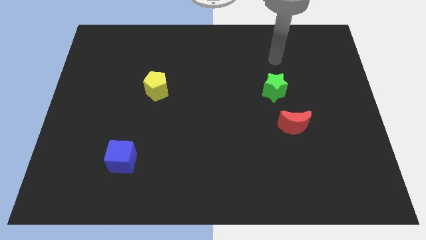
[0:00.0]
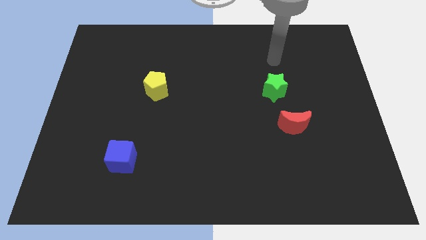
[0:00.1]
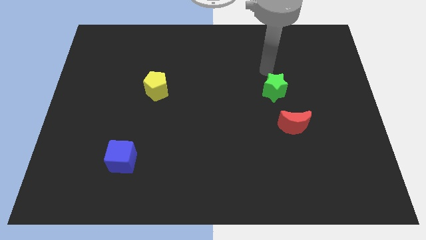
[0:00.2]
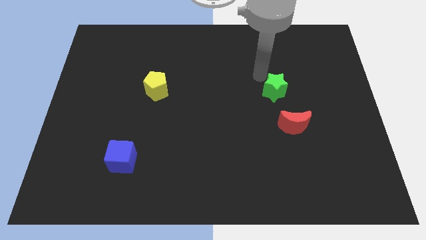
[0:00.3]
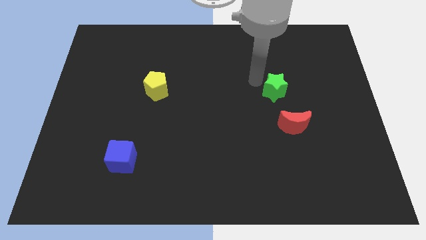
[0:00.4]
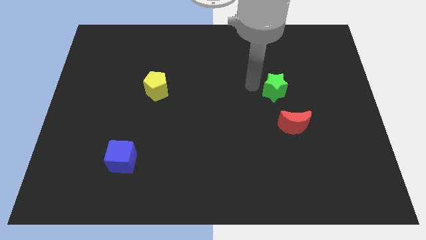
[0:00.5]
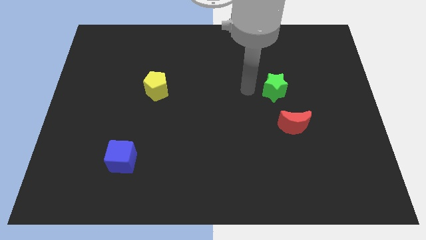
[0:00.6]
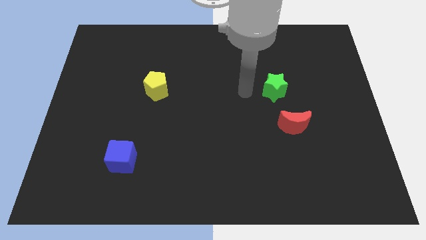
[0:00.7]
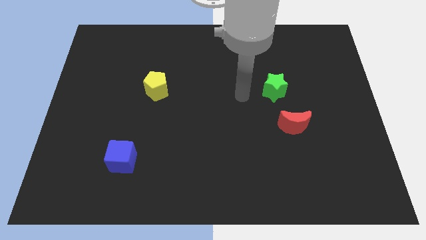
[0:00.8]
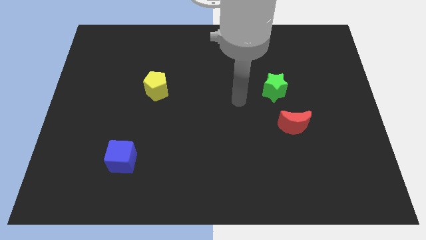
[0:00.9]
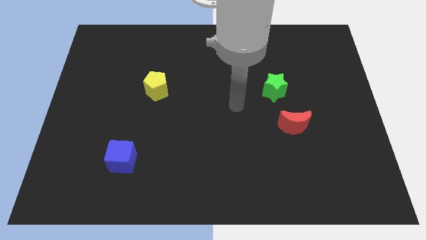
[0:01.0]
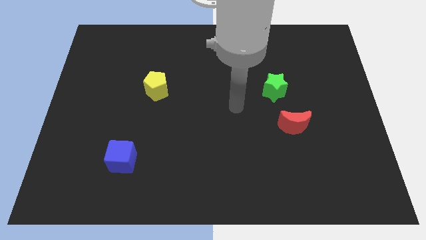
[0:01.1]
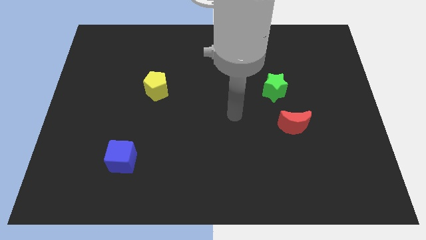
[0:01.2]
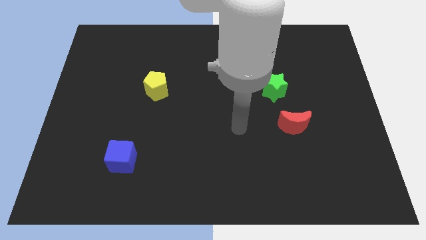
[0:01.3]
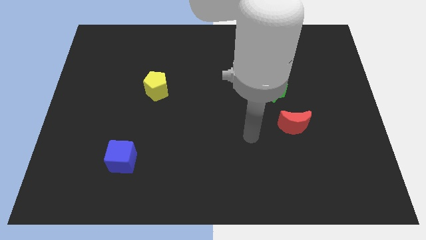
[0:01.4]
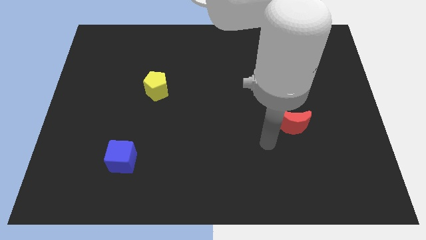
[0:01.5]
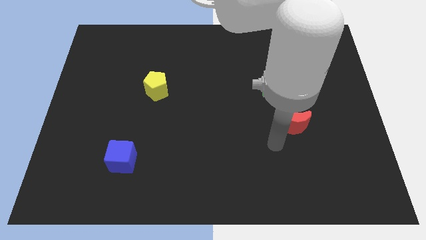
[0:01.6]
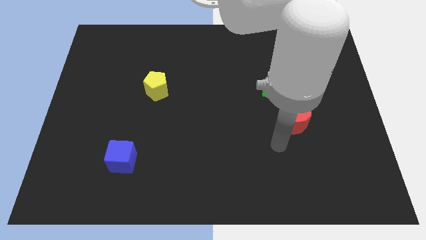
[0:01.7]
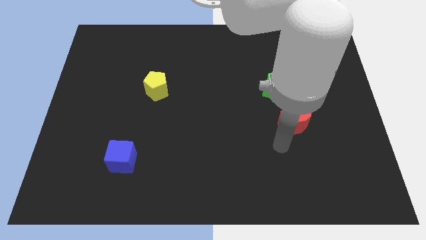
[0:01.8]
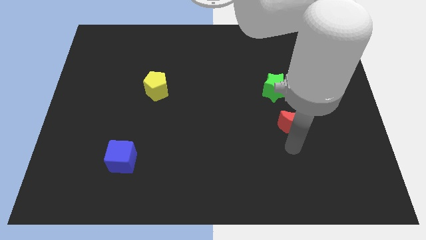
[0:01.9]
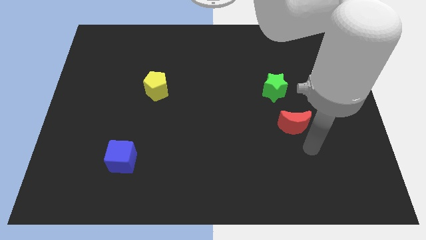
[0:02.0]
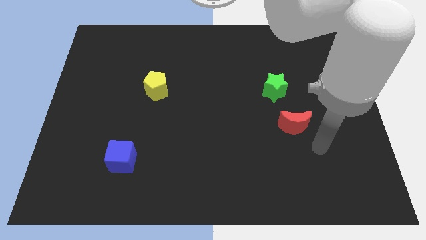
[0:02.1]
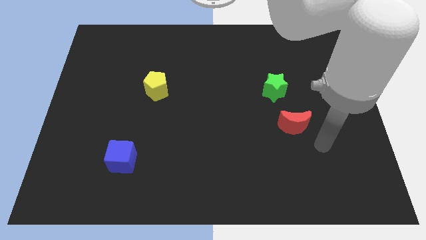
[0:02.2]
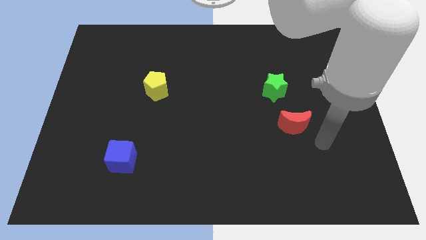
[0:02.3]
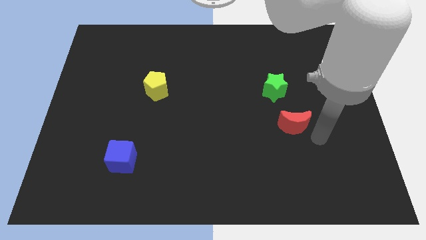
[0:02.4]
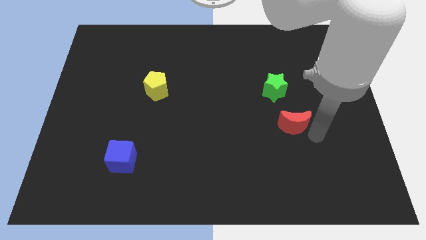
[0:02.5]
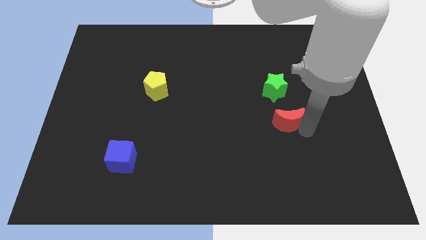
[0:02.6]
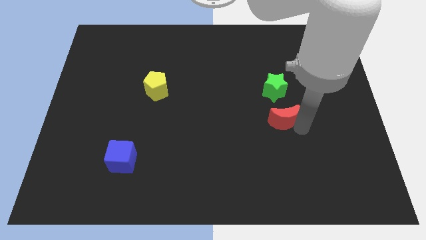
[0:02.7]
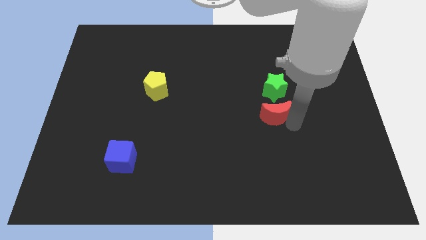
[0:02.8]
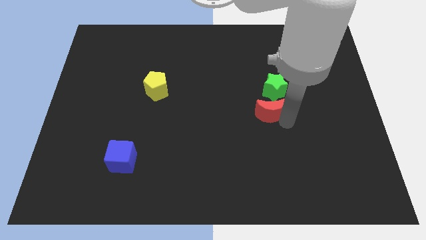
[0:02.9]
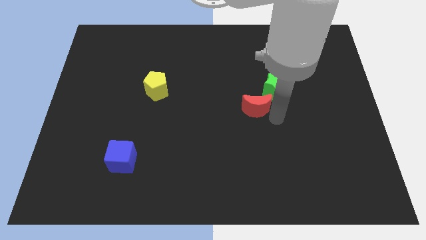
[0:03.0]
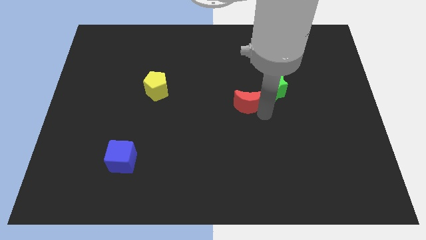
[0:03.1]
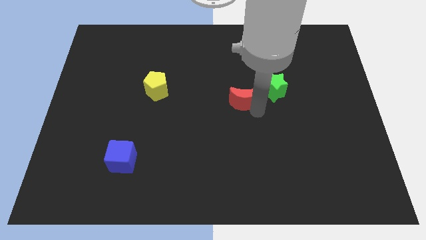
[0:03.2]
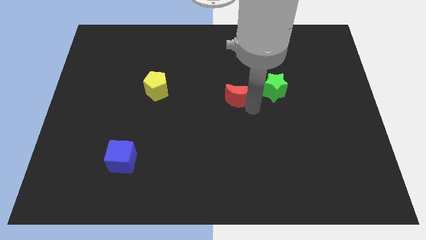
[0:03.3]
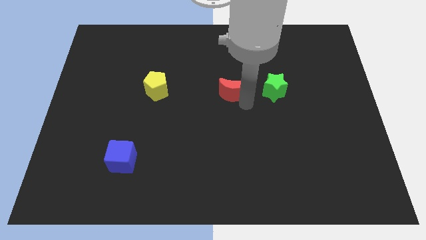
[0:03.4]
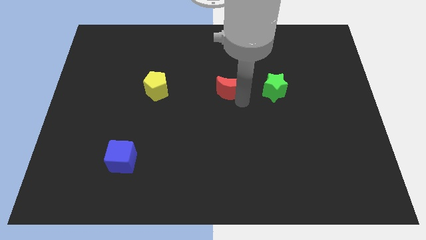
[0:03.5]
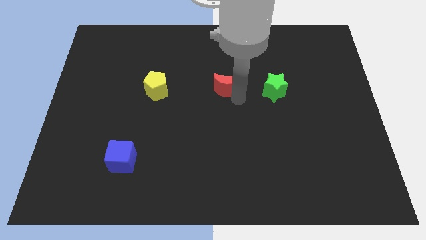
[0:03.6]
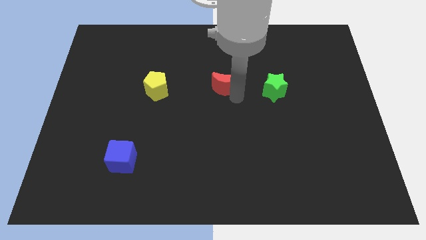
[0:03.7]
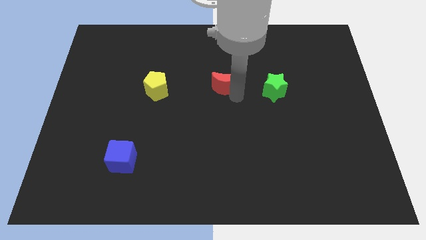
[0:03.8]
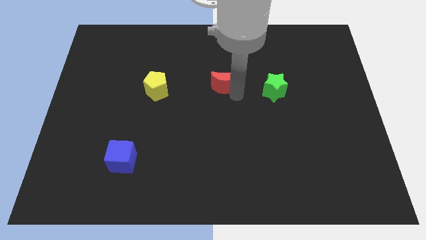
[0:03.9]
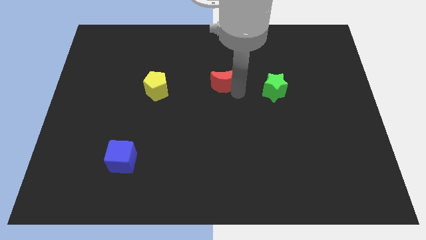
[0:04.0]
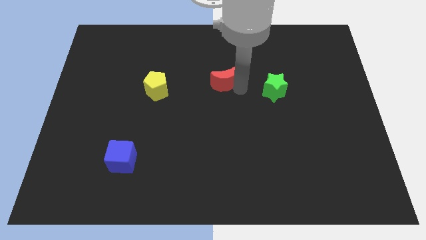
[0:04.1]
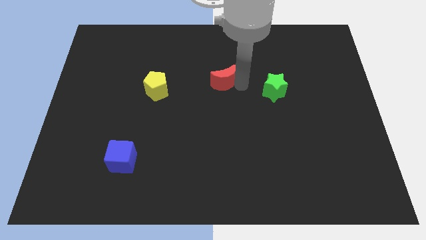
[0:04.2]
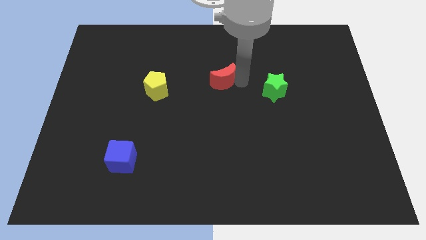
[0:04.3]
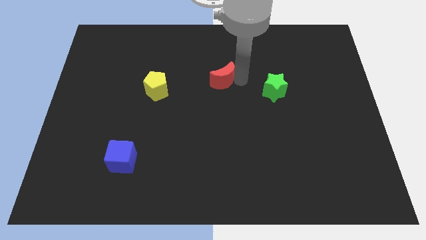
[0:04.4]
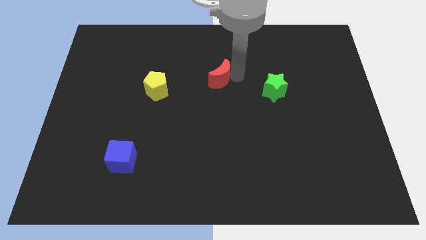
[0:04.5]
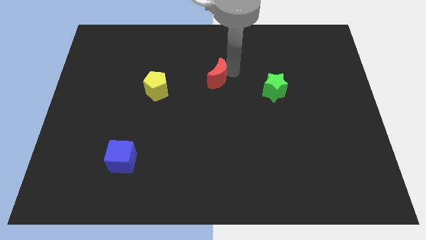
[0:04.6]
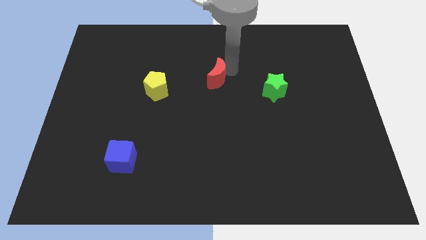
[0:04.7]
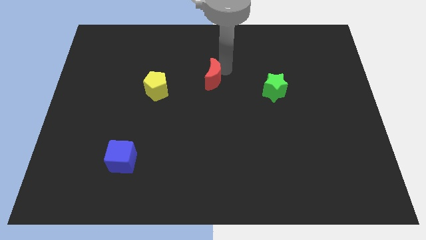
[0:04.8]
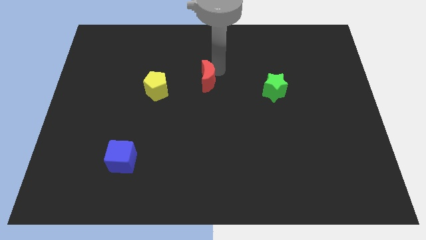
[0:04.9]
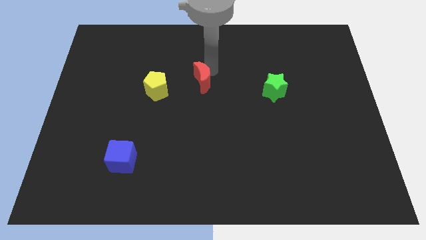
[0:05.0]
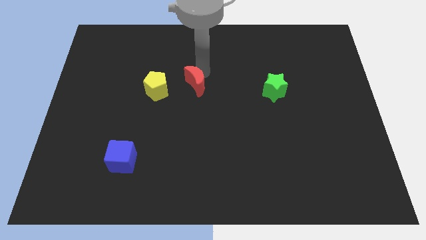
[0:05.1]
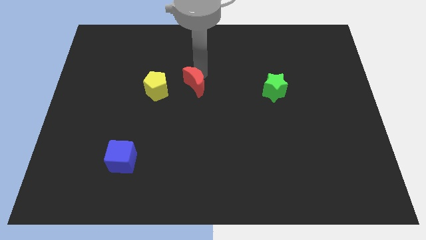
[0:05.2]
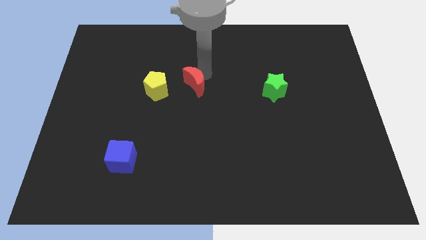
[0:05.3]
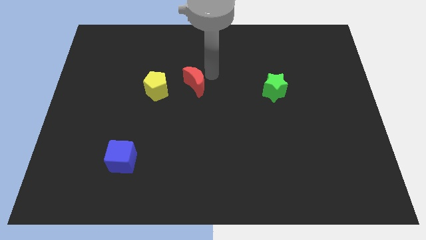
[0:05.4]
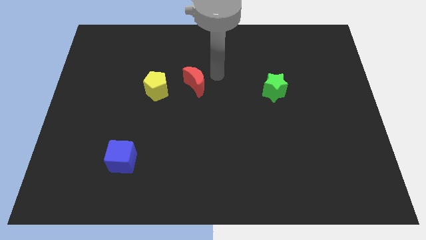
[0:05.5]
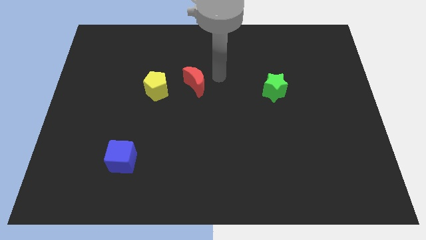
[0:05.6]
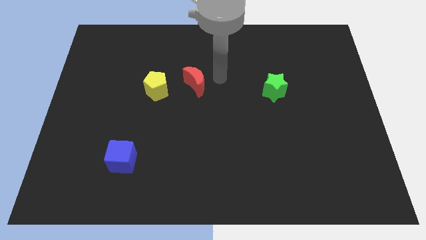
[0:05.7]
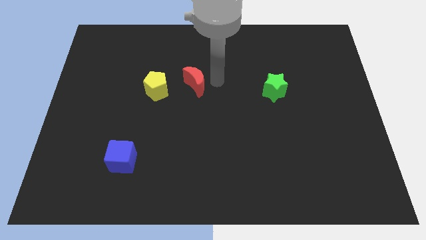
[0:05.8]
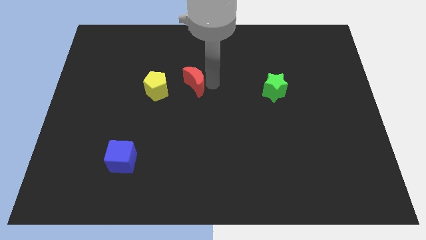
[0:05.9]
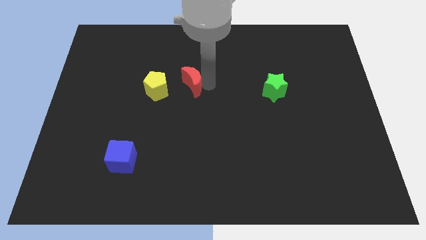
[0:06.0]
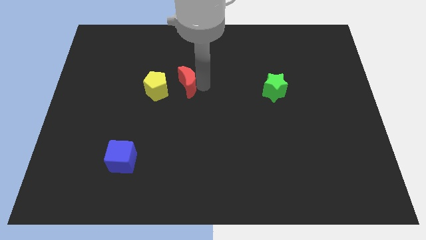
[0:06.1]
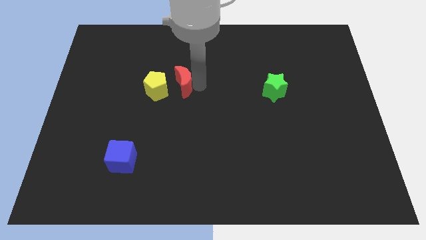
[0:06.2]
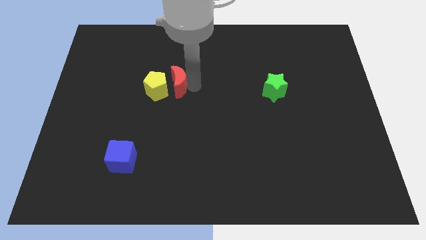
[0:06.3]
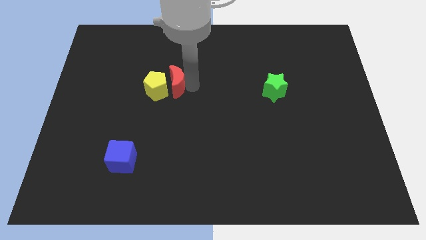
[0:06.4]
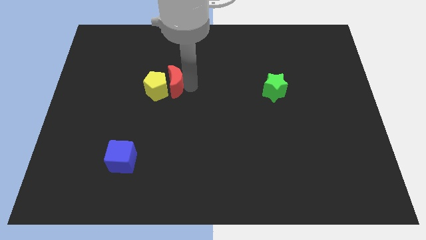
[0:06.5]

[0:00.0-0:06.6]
move the red block close to the yellow pentagon

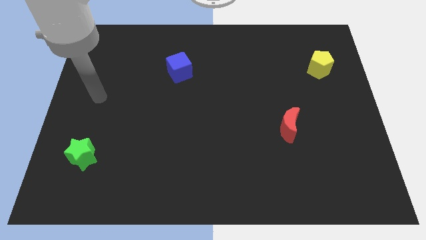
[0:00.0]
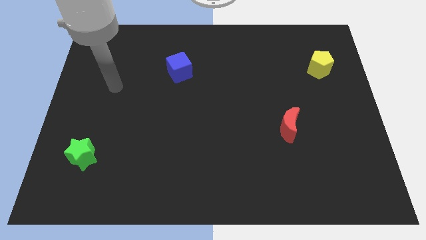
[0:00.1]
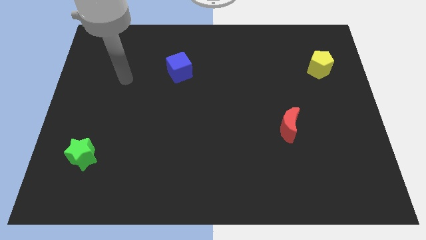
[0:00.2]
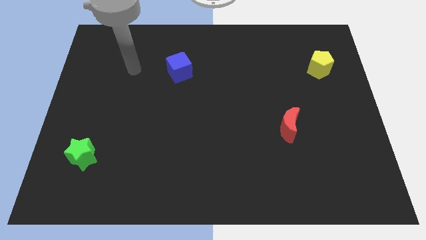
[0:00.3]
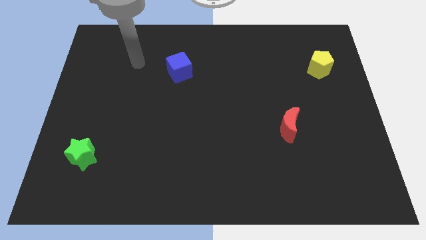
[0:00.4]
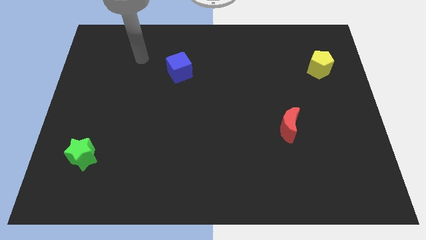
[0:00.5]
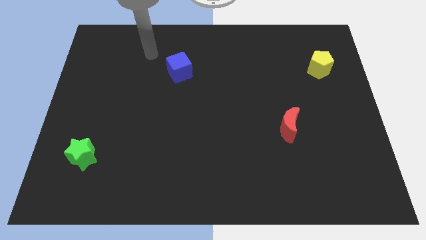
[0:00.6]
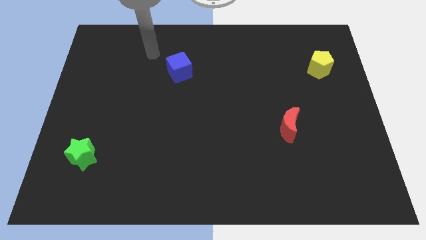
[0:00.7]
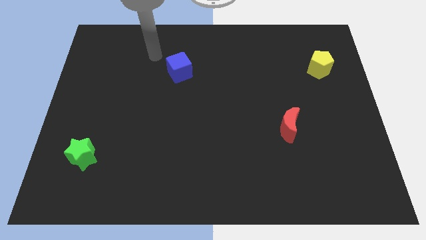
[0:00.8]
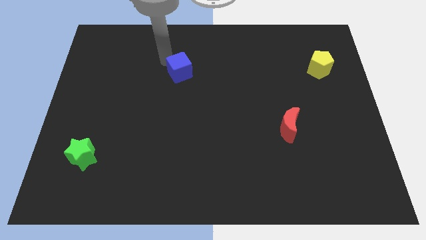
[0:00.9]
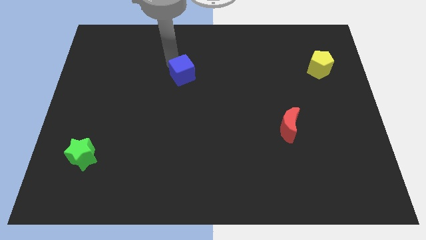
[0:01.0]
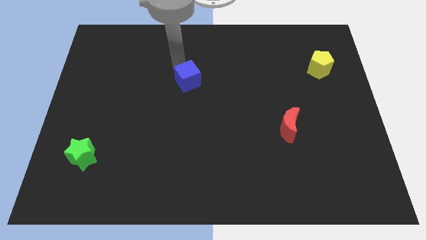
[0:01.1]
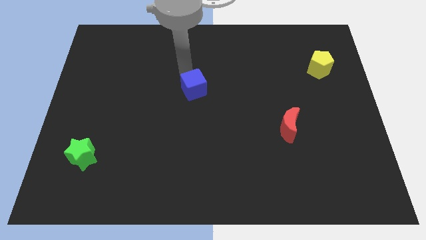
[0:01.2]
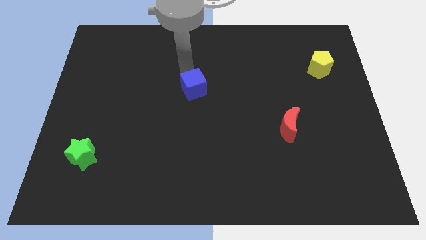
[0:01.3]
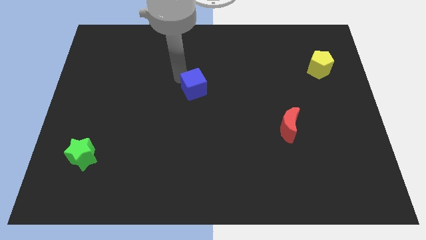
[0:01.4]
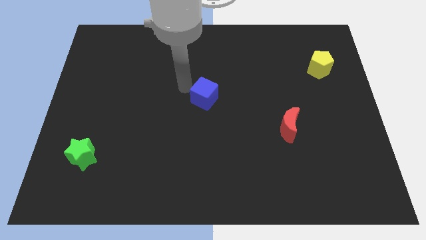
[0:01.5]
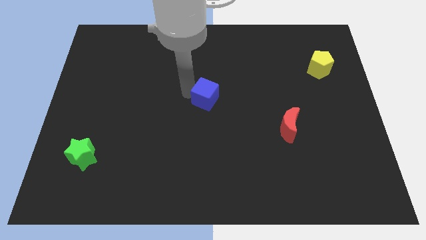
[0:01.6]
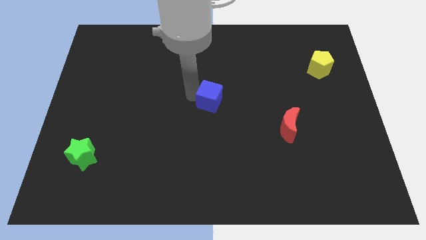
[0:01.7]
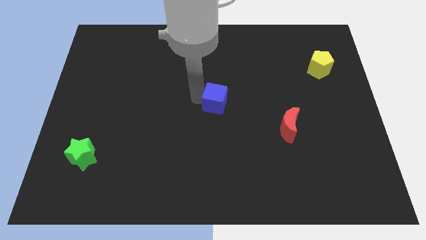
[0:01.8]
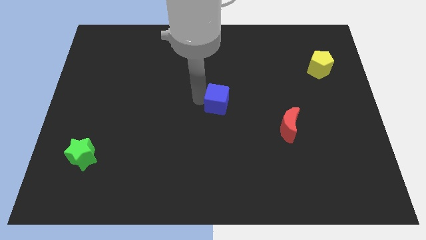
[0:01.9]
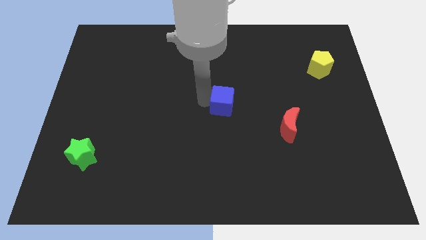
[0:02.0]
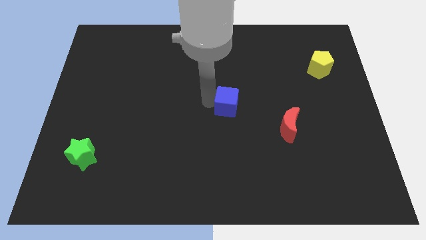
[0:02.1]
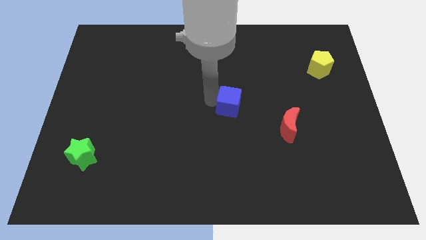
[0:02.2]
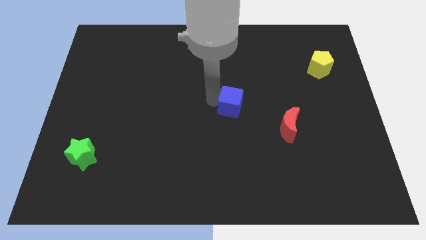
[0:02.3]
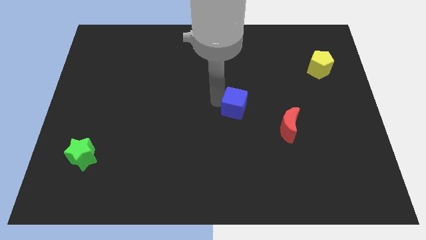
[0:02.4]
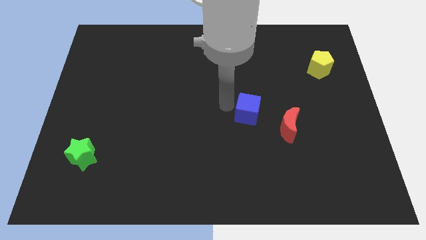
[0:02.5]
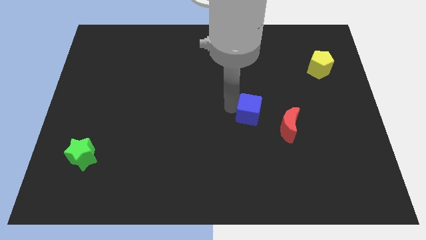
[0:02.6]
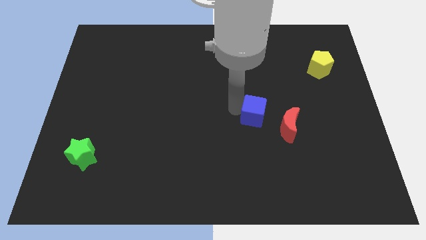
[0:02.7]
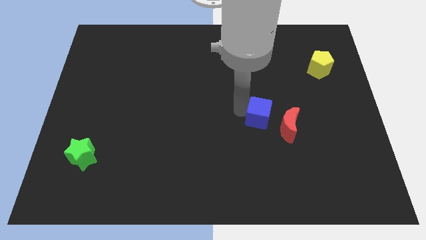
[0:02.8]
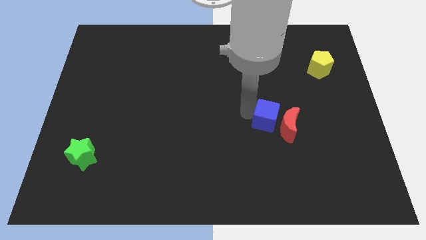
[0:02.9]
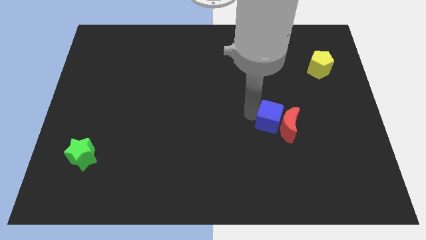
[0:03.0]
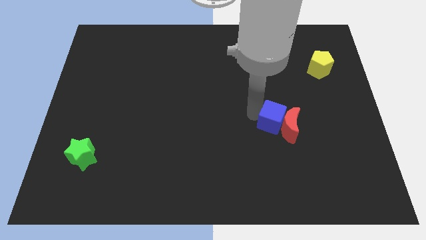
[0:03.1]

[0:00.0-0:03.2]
slide the blue block next to the moon
